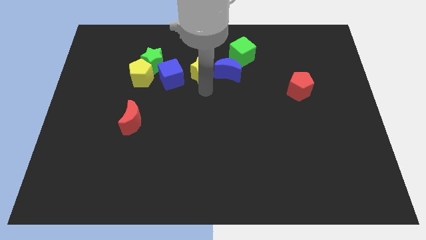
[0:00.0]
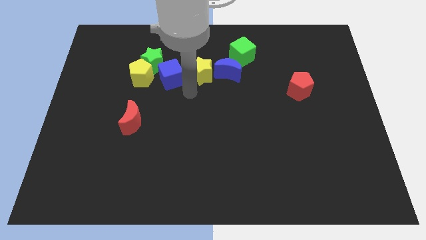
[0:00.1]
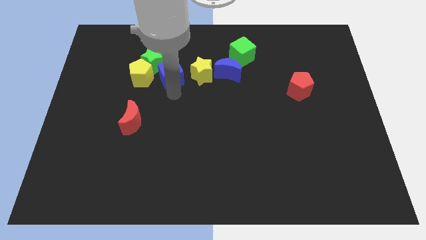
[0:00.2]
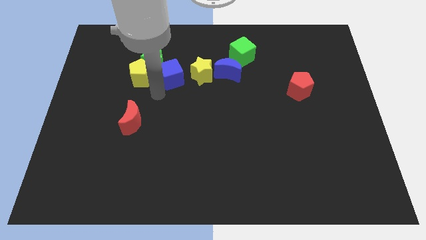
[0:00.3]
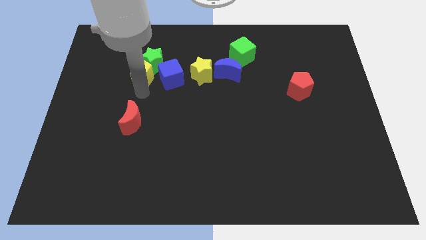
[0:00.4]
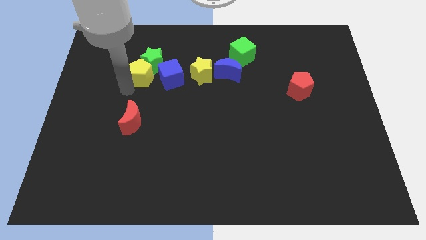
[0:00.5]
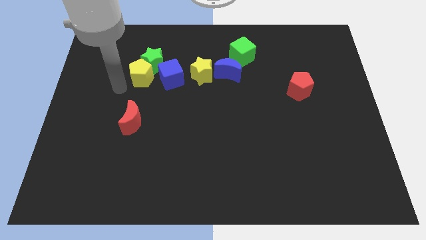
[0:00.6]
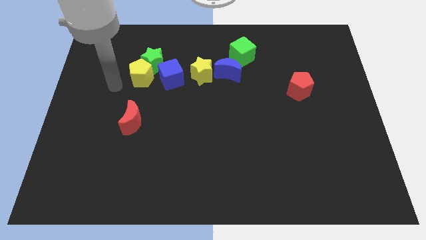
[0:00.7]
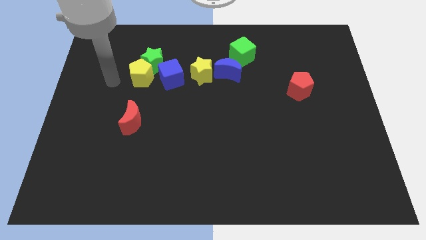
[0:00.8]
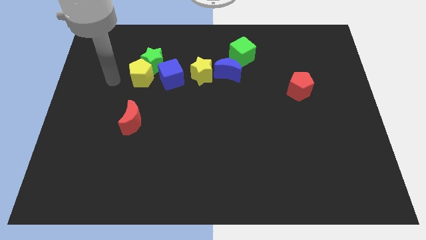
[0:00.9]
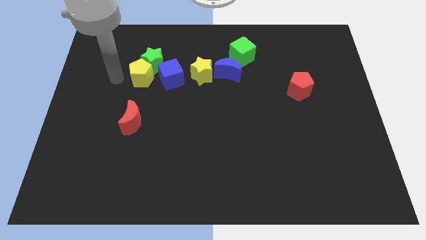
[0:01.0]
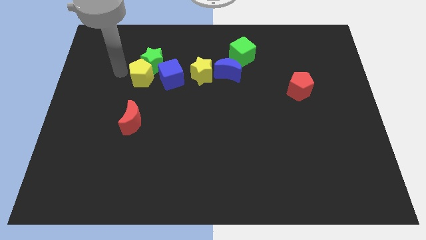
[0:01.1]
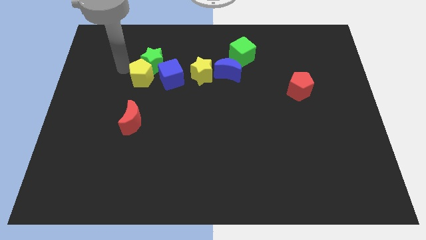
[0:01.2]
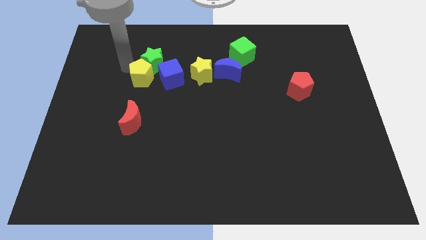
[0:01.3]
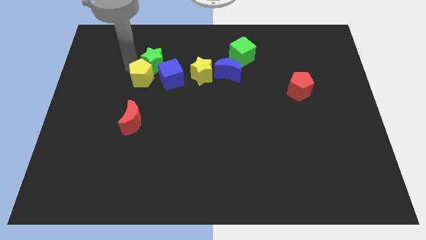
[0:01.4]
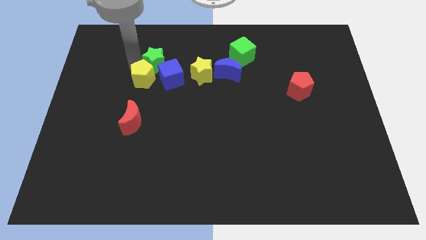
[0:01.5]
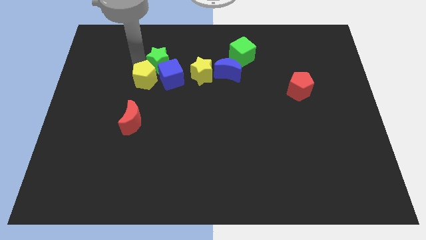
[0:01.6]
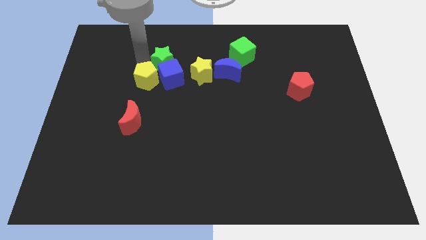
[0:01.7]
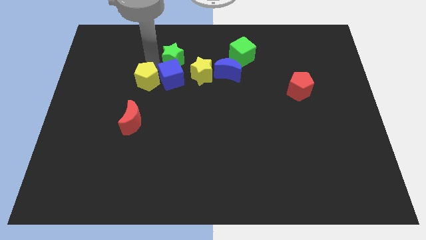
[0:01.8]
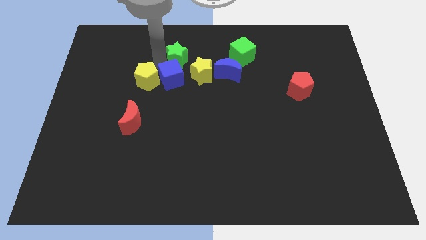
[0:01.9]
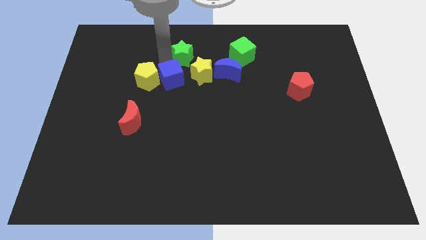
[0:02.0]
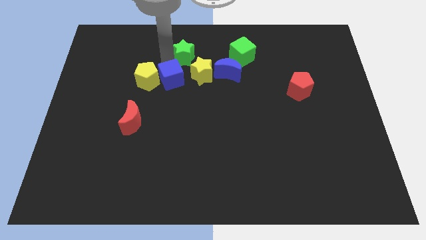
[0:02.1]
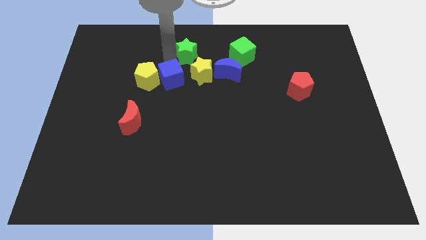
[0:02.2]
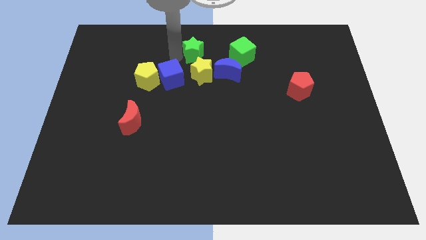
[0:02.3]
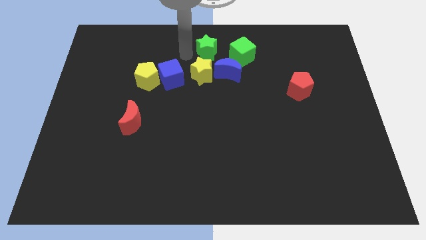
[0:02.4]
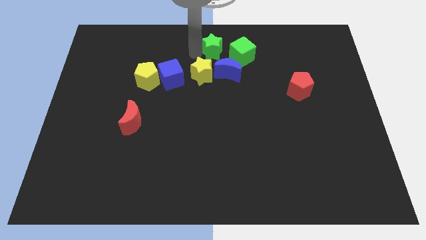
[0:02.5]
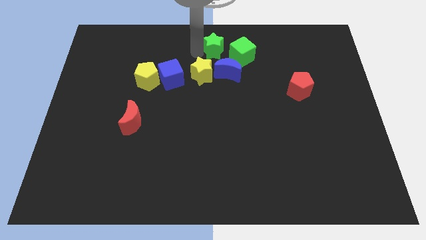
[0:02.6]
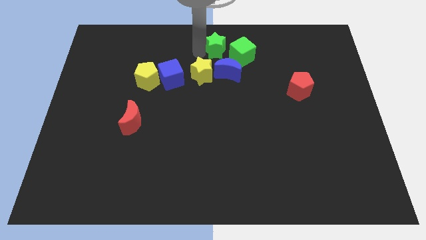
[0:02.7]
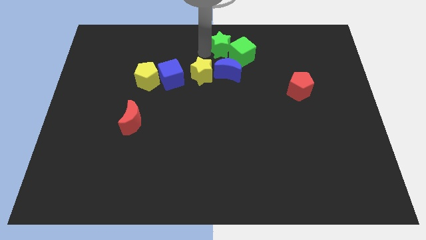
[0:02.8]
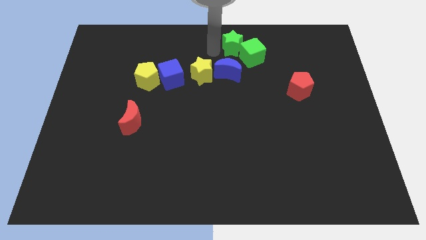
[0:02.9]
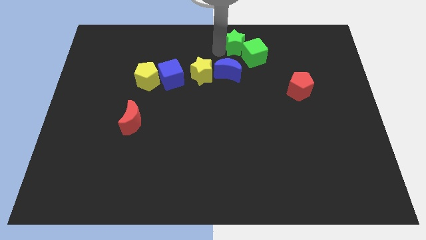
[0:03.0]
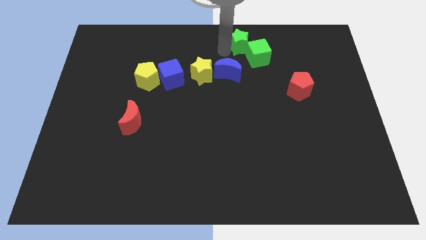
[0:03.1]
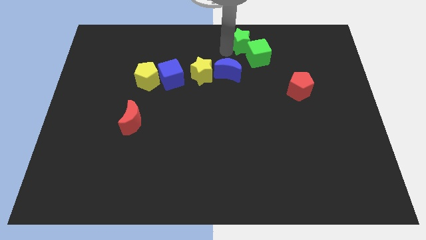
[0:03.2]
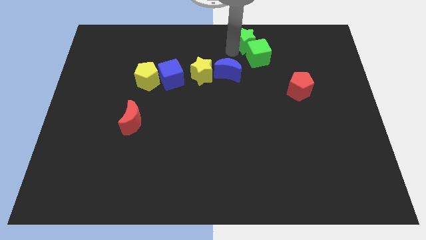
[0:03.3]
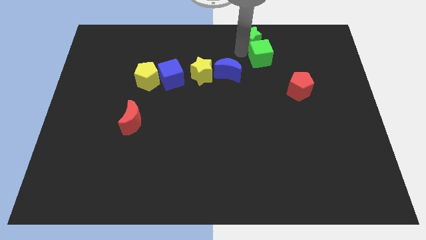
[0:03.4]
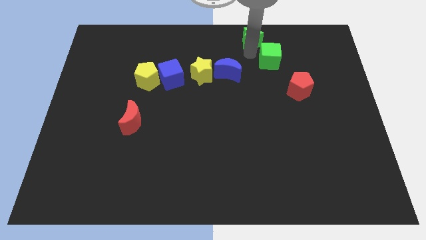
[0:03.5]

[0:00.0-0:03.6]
place the green star above the green cube

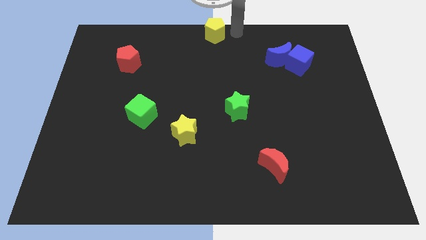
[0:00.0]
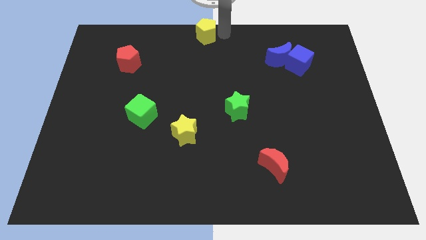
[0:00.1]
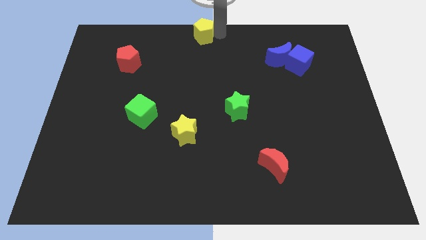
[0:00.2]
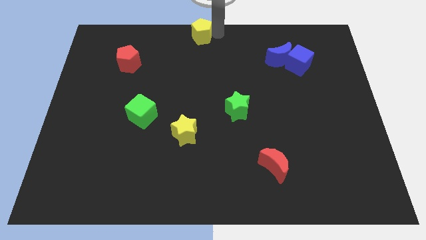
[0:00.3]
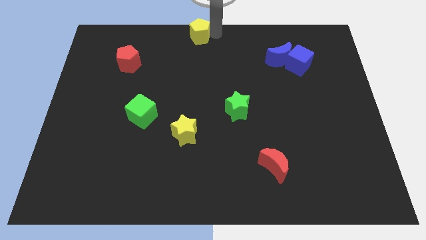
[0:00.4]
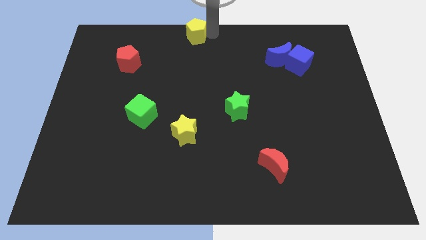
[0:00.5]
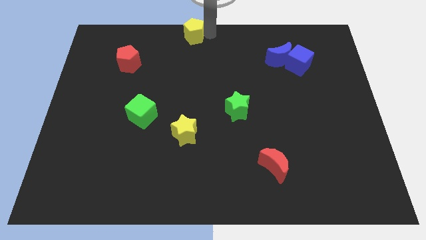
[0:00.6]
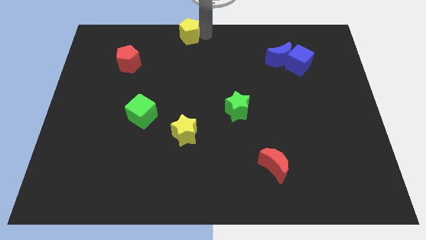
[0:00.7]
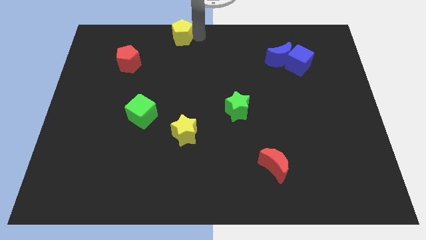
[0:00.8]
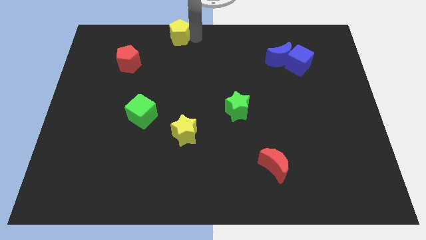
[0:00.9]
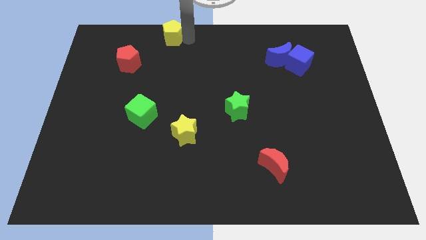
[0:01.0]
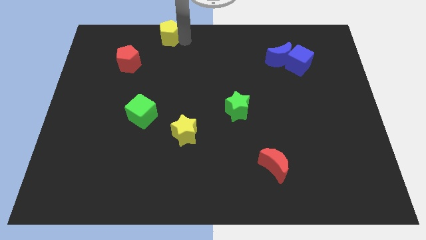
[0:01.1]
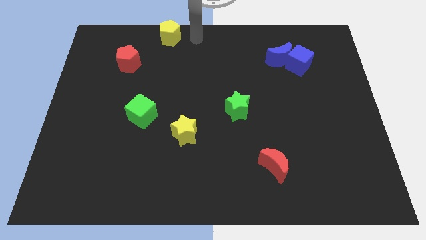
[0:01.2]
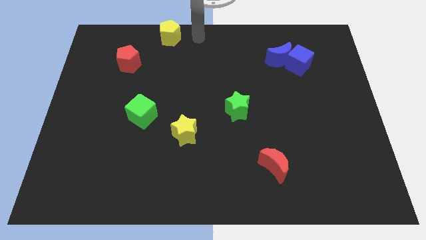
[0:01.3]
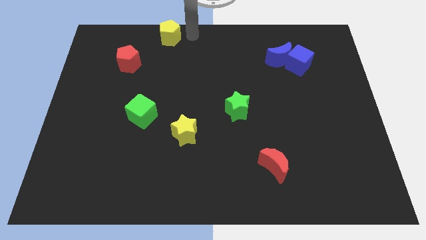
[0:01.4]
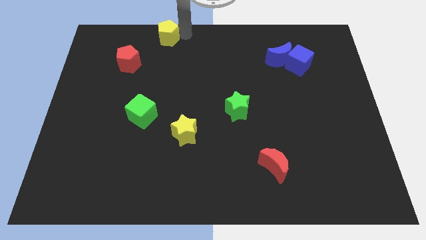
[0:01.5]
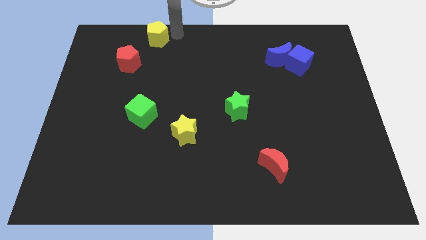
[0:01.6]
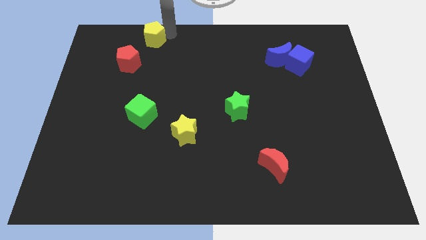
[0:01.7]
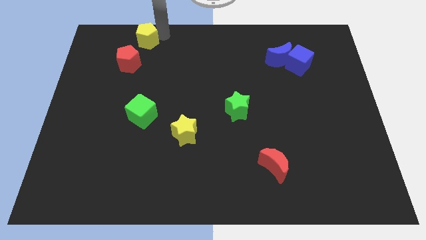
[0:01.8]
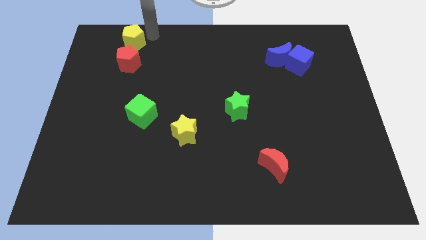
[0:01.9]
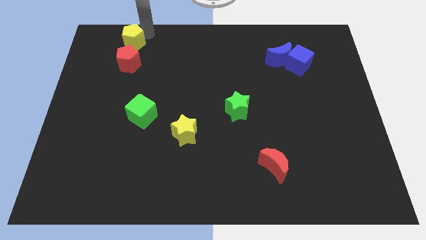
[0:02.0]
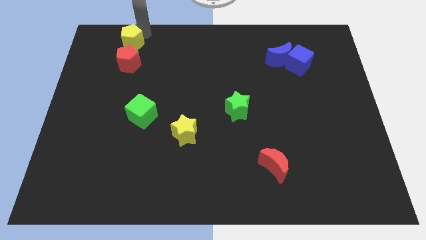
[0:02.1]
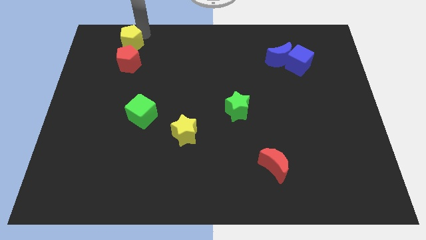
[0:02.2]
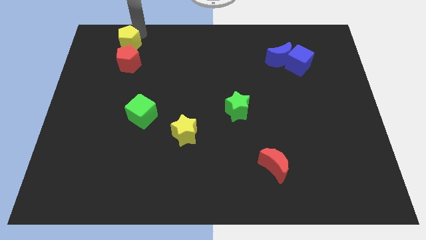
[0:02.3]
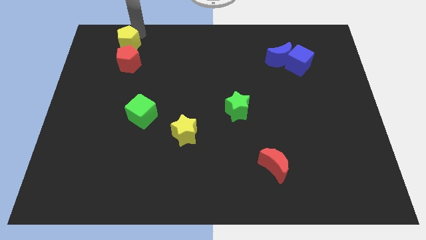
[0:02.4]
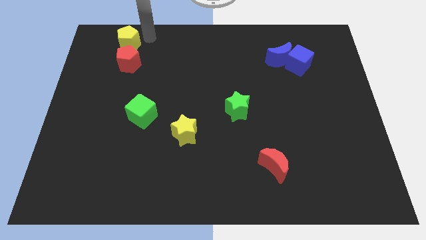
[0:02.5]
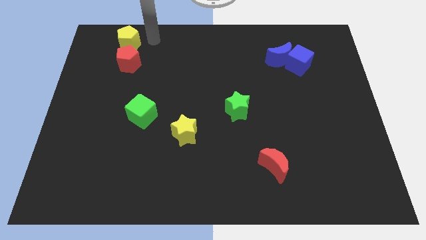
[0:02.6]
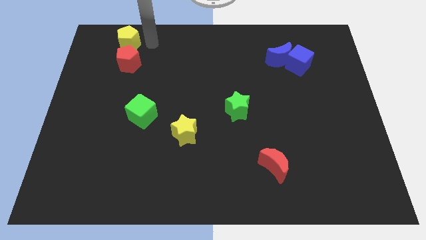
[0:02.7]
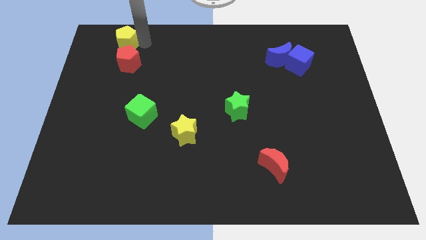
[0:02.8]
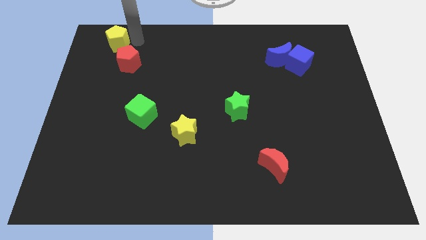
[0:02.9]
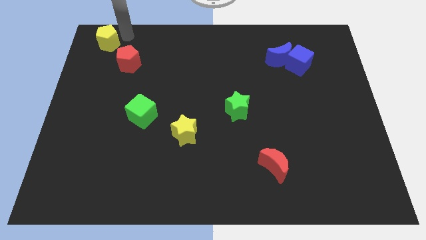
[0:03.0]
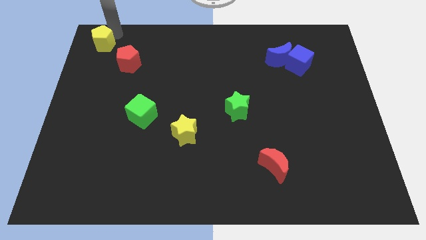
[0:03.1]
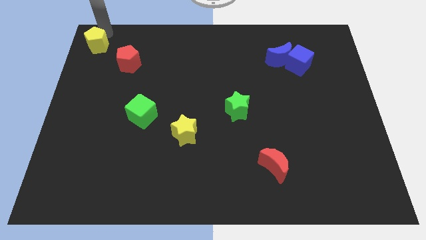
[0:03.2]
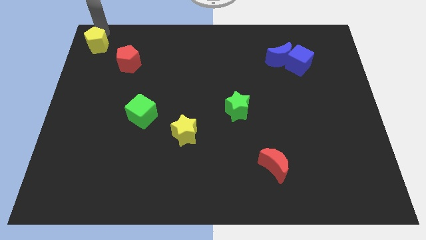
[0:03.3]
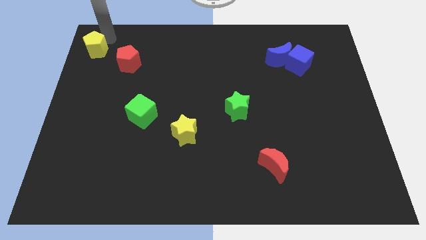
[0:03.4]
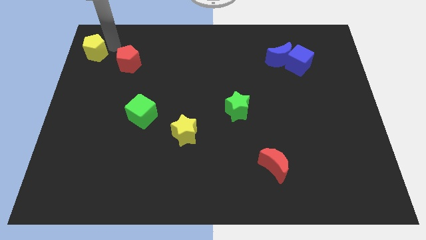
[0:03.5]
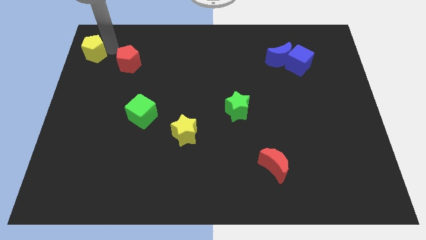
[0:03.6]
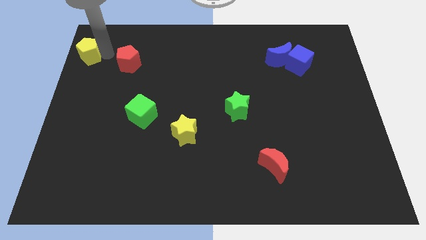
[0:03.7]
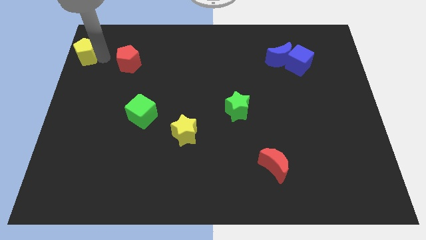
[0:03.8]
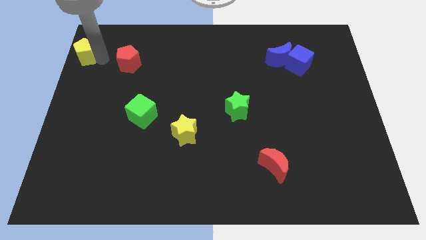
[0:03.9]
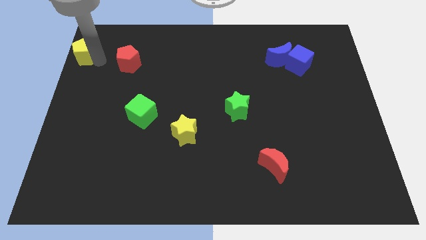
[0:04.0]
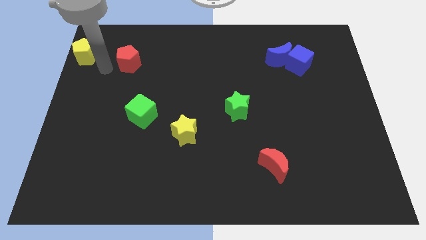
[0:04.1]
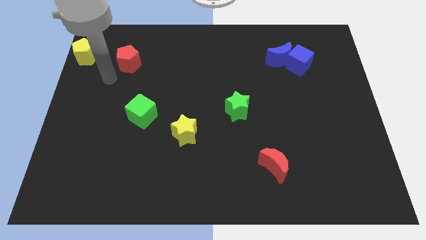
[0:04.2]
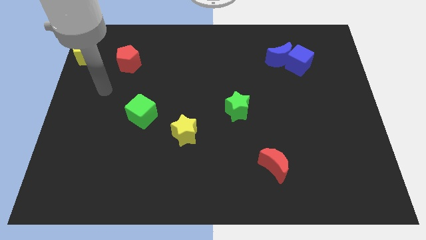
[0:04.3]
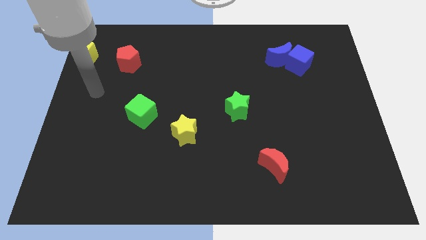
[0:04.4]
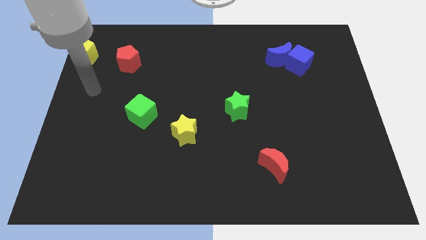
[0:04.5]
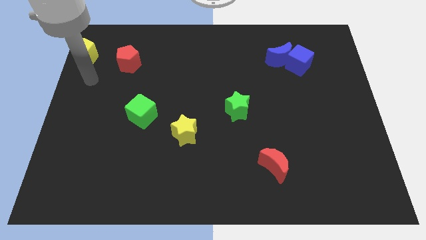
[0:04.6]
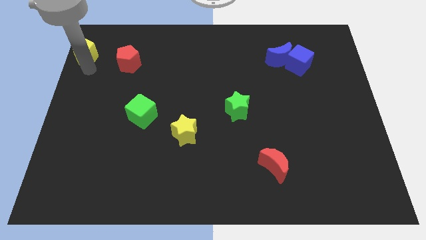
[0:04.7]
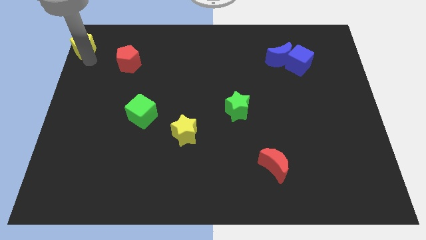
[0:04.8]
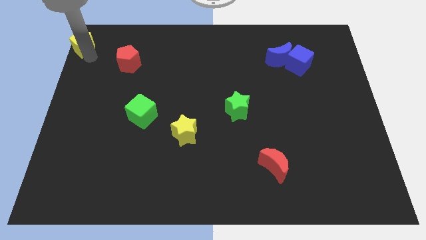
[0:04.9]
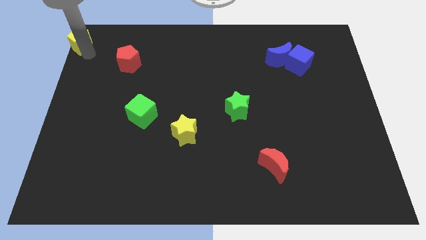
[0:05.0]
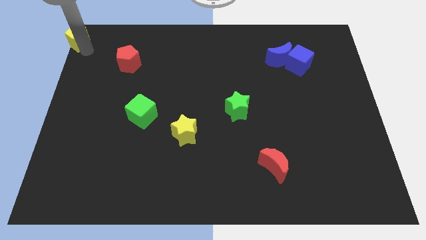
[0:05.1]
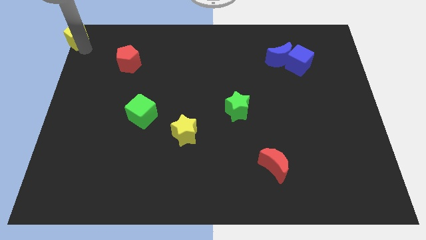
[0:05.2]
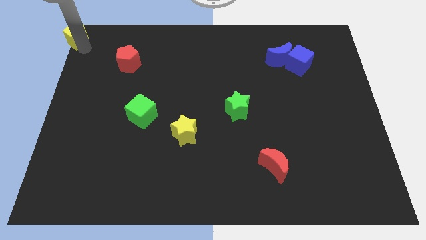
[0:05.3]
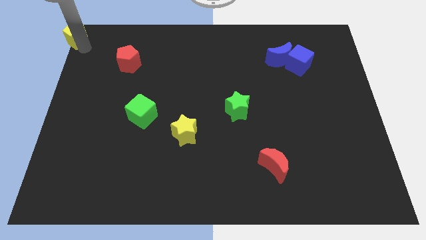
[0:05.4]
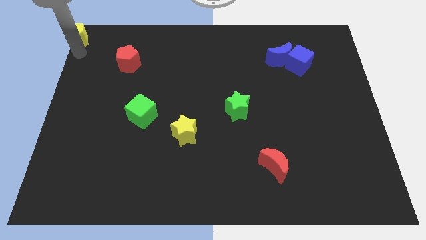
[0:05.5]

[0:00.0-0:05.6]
put the yellow pentagon at the top left corner of the board
